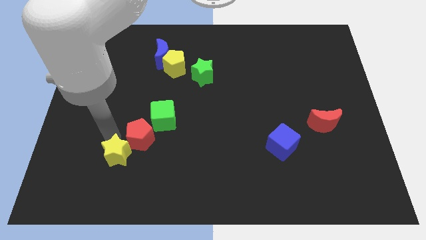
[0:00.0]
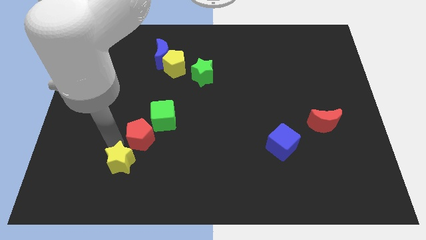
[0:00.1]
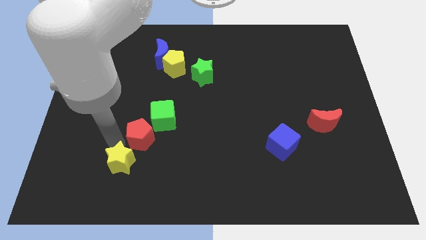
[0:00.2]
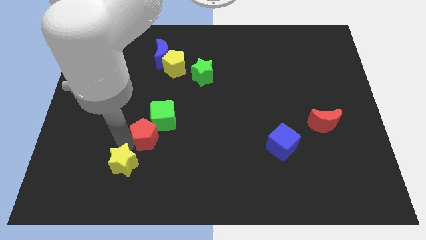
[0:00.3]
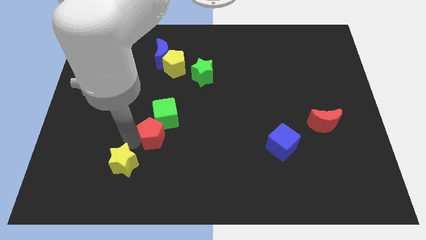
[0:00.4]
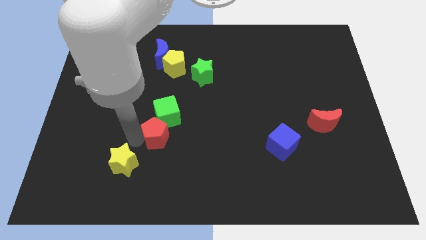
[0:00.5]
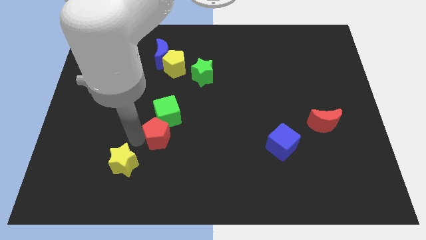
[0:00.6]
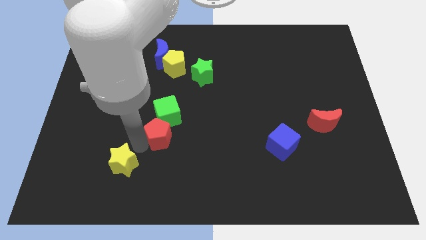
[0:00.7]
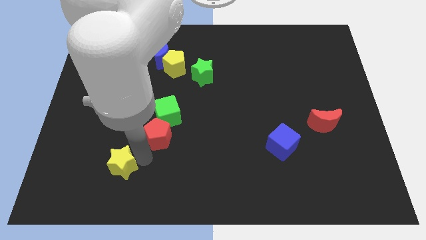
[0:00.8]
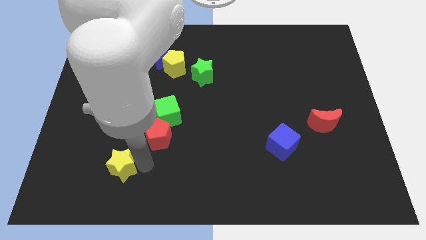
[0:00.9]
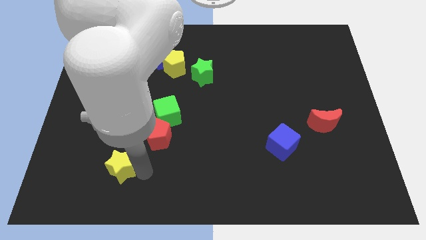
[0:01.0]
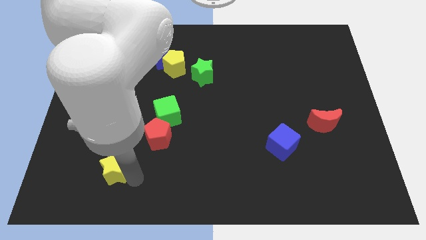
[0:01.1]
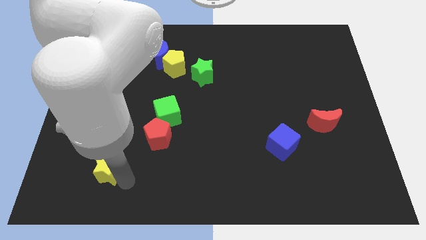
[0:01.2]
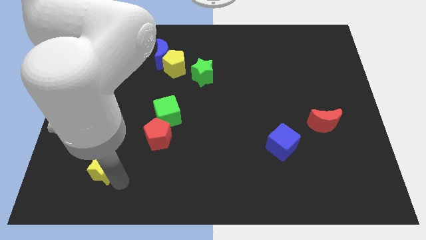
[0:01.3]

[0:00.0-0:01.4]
move the yellow star away from the red pentagon

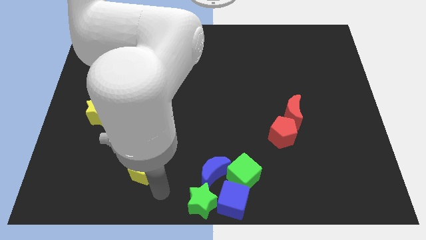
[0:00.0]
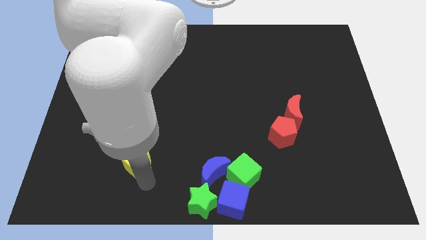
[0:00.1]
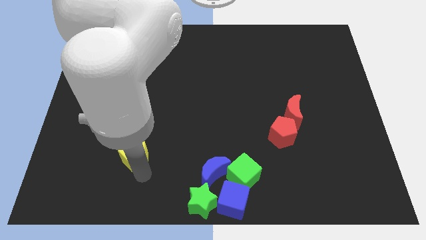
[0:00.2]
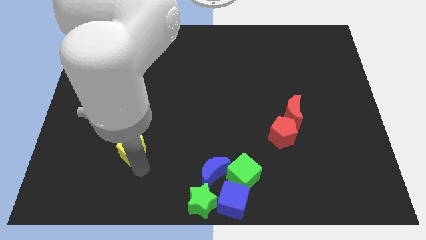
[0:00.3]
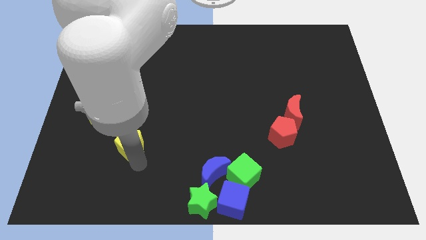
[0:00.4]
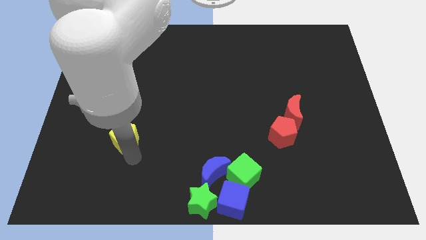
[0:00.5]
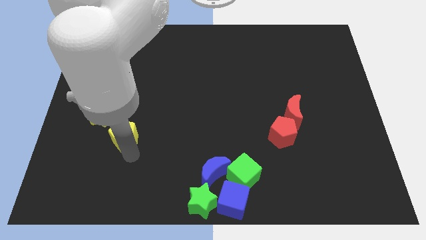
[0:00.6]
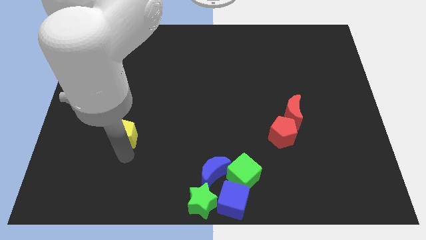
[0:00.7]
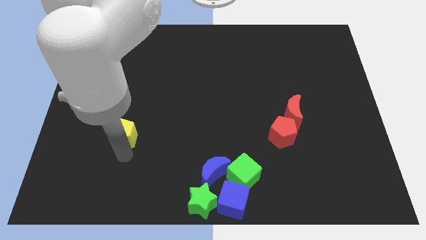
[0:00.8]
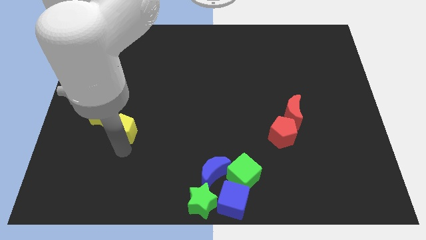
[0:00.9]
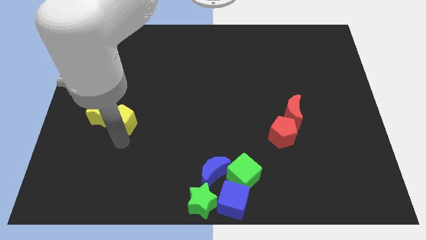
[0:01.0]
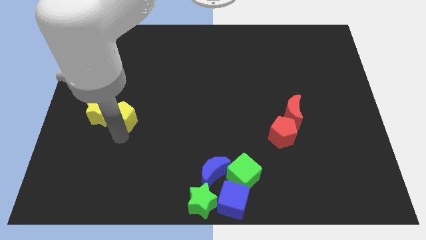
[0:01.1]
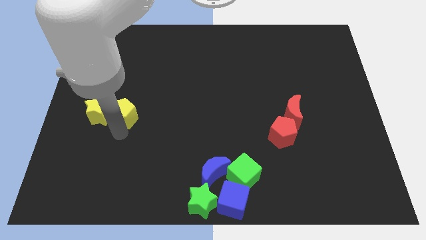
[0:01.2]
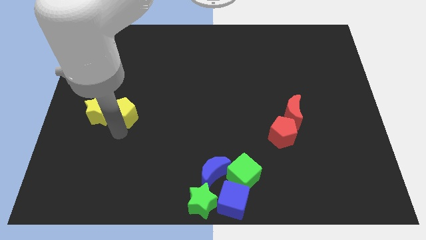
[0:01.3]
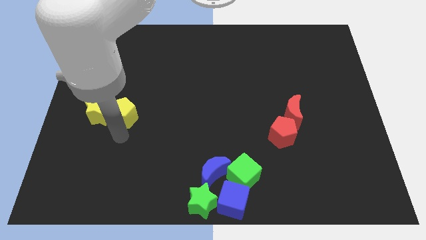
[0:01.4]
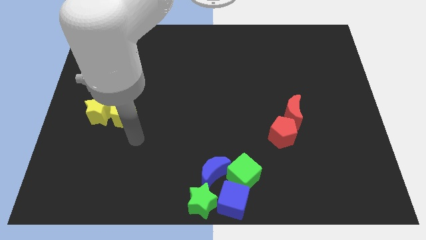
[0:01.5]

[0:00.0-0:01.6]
move the yellow pentagon to the right side of the yellow star

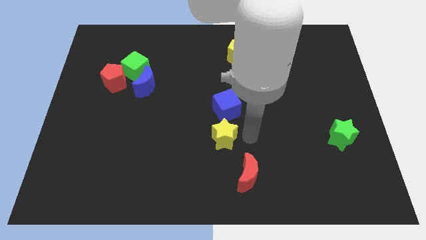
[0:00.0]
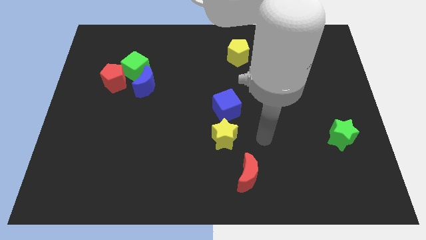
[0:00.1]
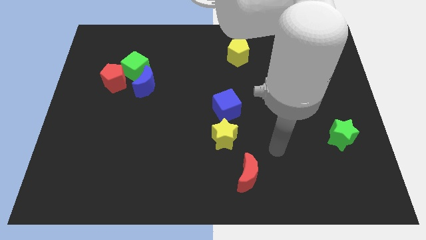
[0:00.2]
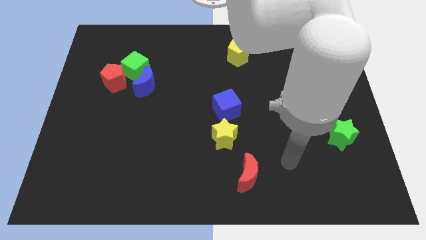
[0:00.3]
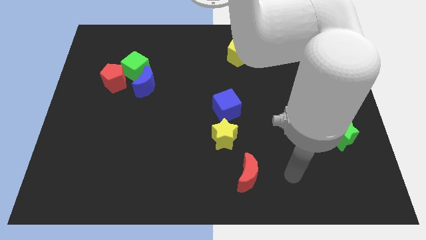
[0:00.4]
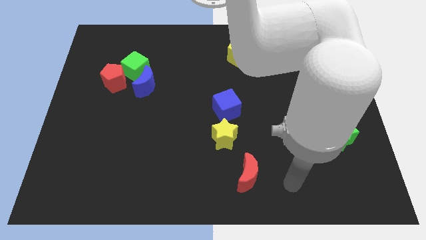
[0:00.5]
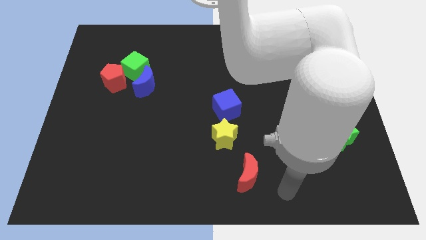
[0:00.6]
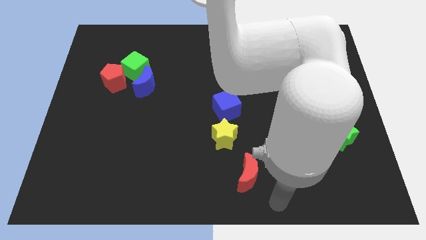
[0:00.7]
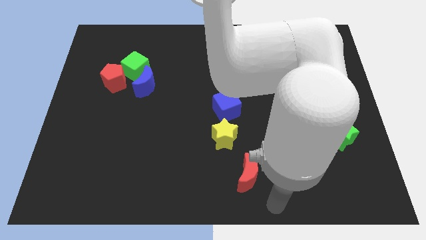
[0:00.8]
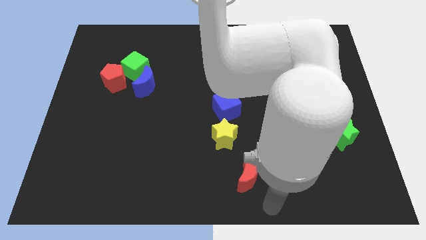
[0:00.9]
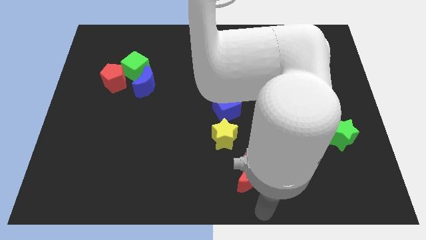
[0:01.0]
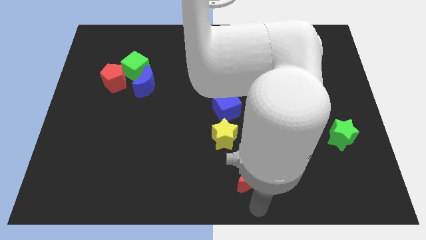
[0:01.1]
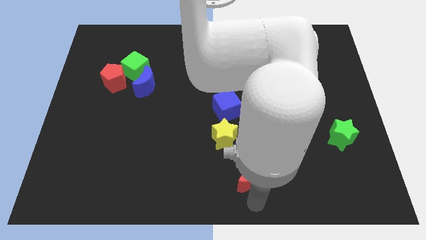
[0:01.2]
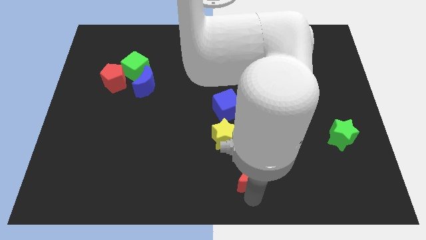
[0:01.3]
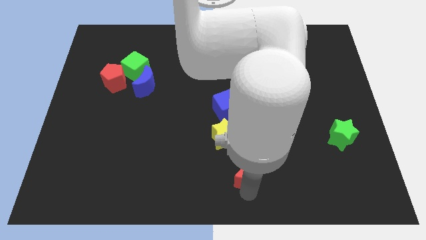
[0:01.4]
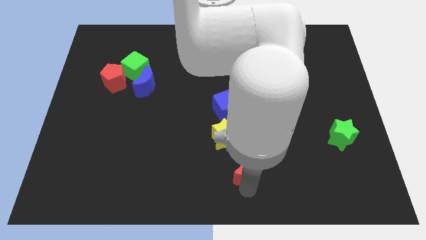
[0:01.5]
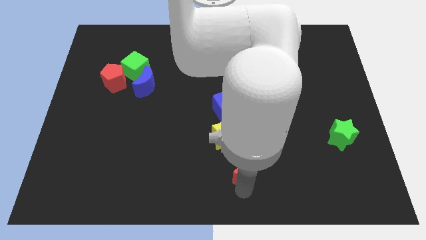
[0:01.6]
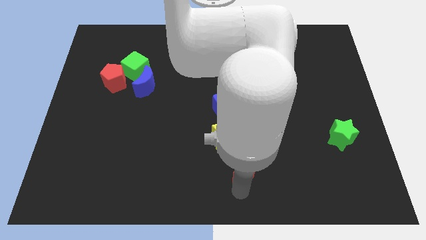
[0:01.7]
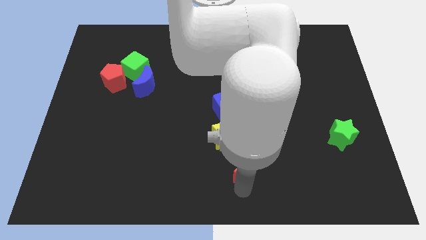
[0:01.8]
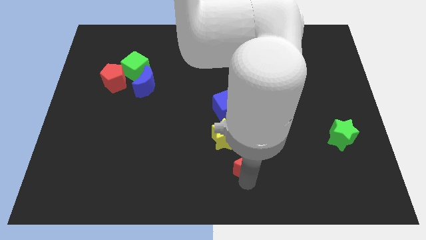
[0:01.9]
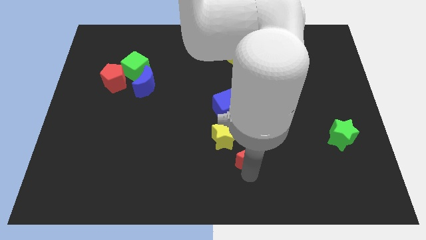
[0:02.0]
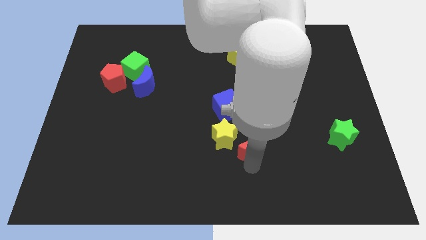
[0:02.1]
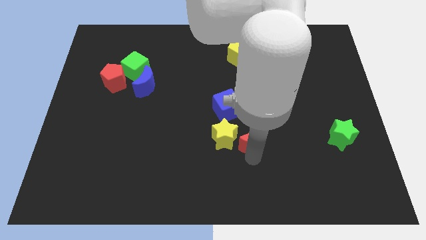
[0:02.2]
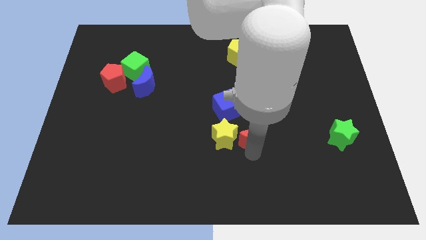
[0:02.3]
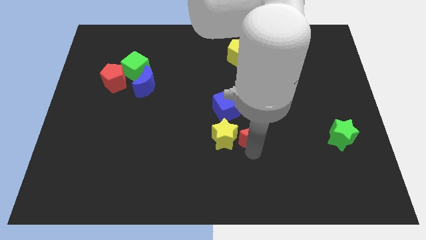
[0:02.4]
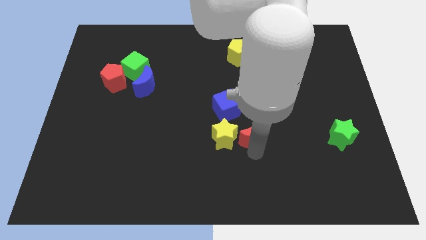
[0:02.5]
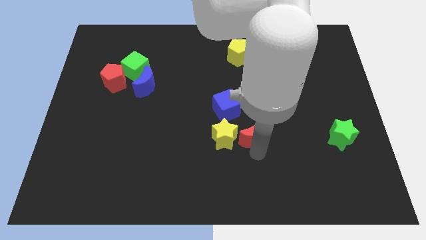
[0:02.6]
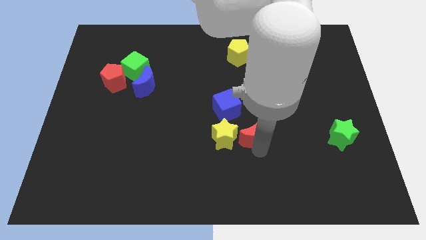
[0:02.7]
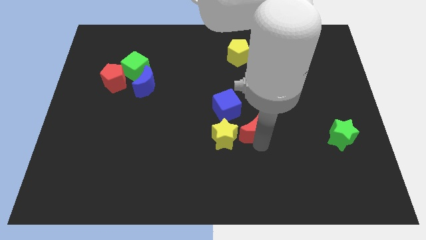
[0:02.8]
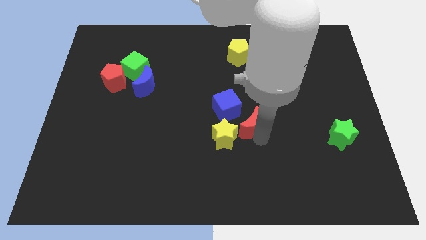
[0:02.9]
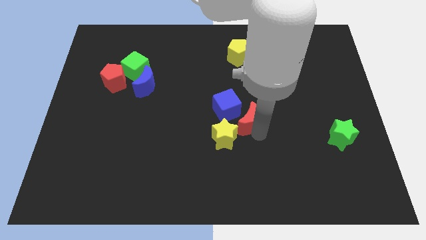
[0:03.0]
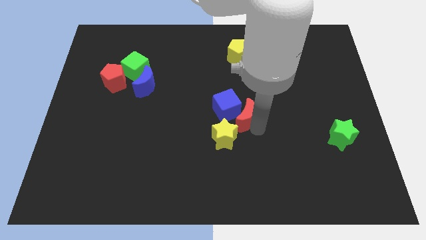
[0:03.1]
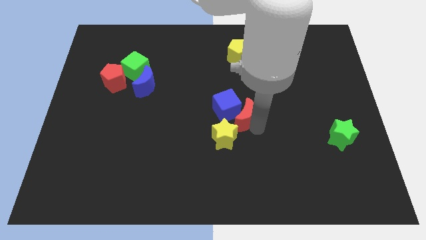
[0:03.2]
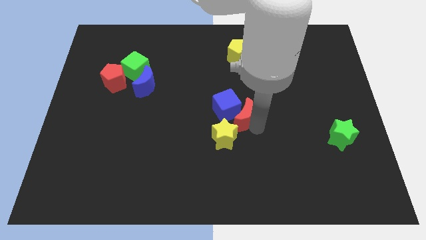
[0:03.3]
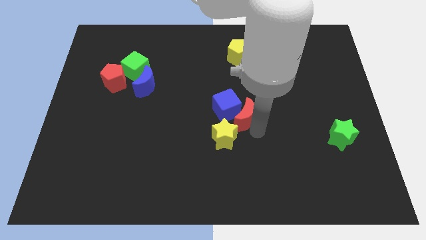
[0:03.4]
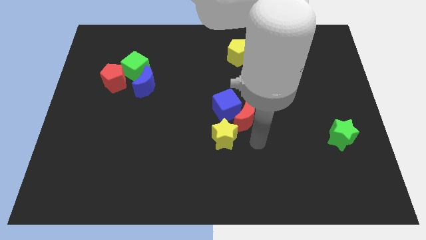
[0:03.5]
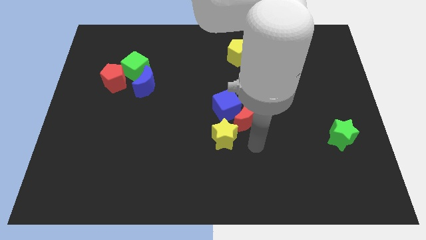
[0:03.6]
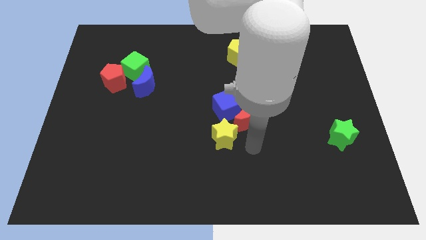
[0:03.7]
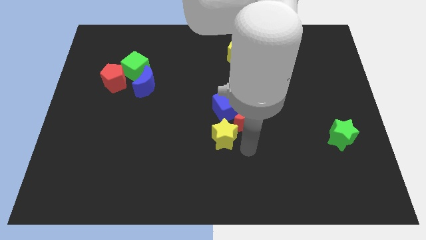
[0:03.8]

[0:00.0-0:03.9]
move red moon into the blue cube

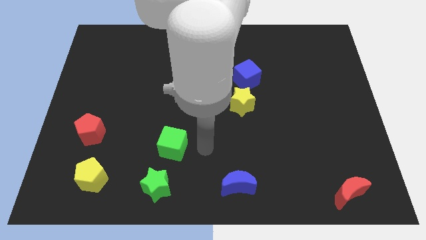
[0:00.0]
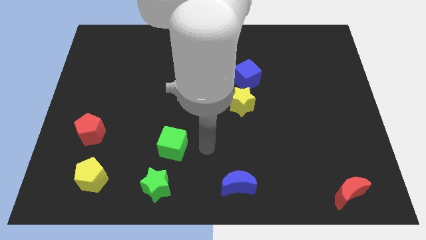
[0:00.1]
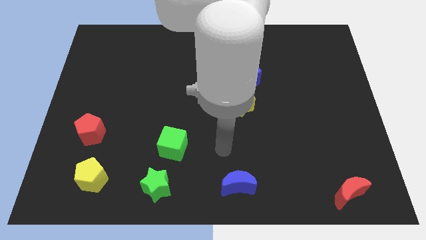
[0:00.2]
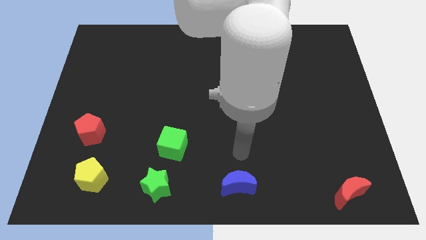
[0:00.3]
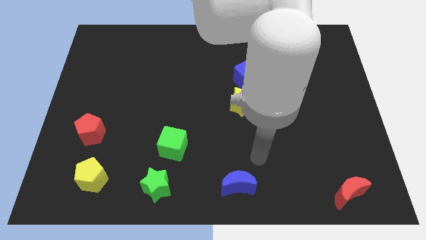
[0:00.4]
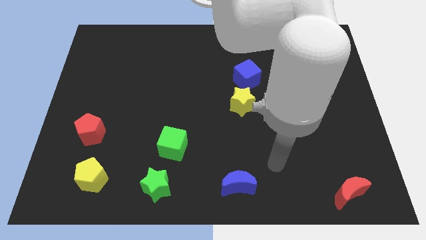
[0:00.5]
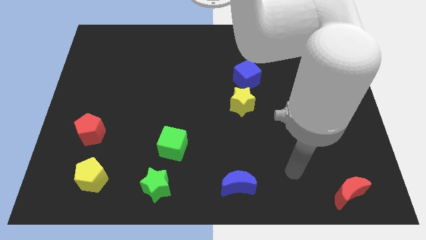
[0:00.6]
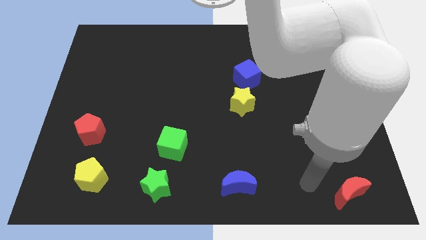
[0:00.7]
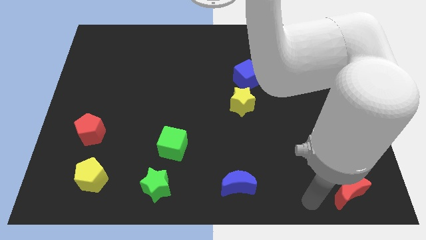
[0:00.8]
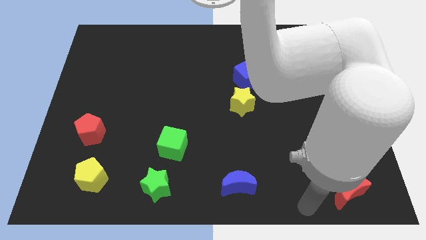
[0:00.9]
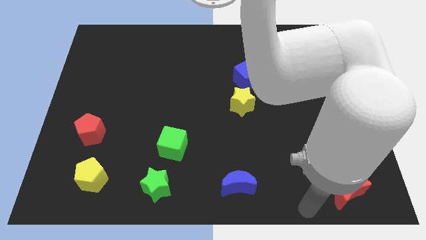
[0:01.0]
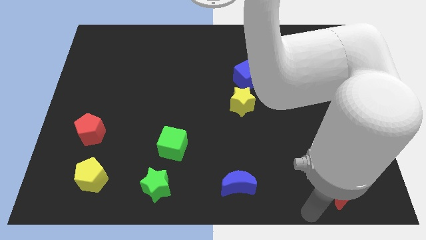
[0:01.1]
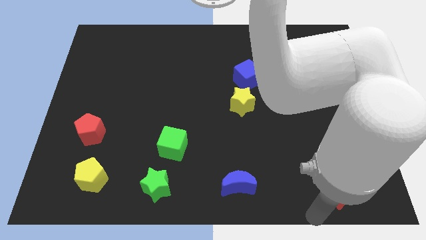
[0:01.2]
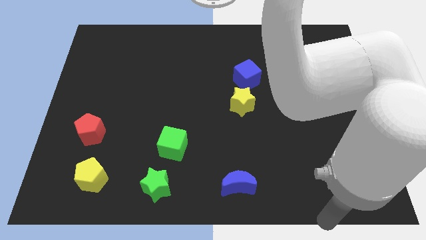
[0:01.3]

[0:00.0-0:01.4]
move the arm towards the red moon

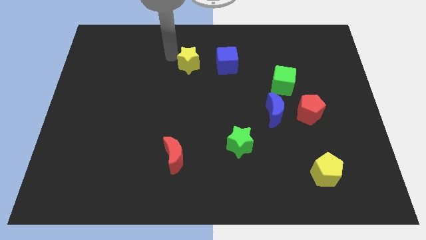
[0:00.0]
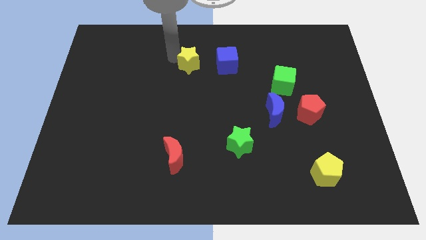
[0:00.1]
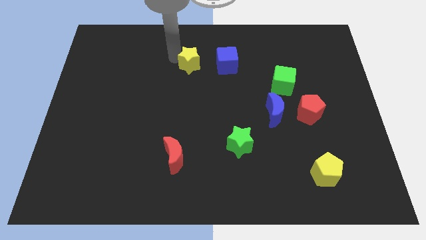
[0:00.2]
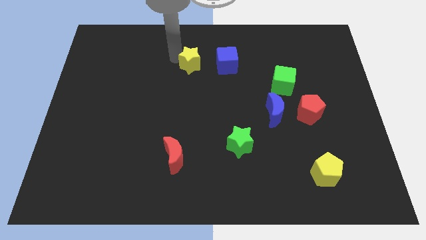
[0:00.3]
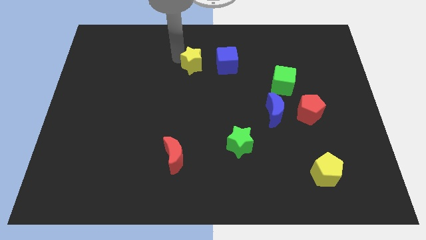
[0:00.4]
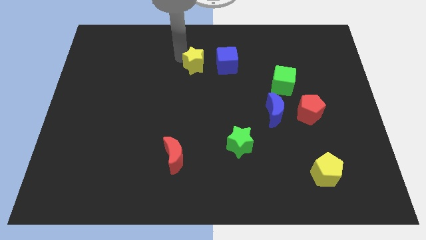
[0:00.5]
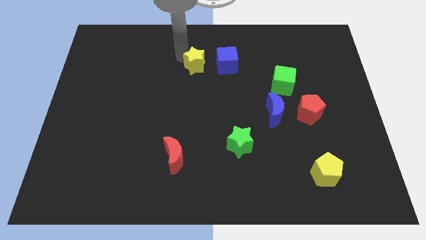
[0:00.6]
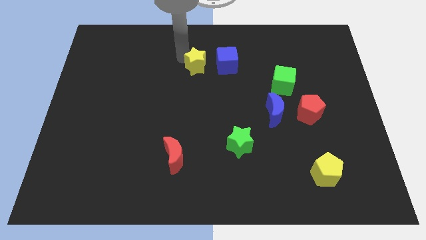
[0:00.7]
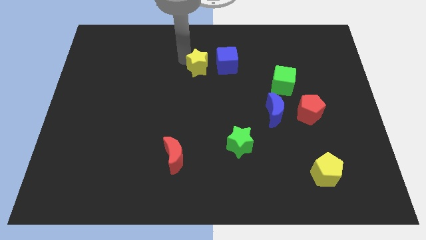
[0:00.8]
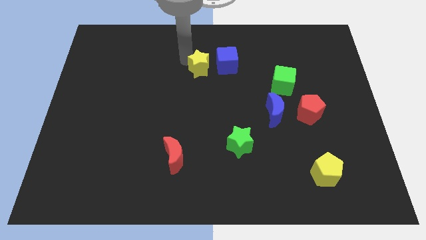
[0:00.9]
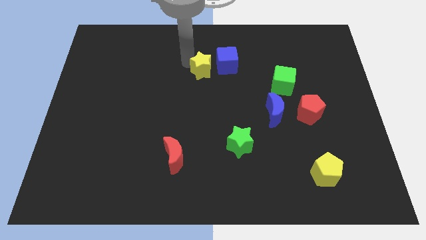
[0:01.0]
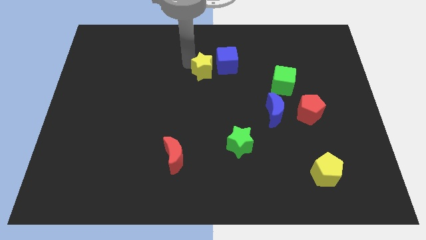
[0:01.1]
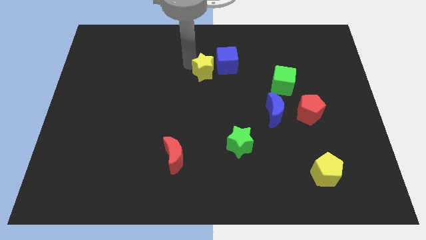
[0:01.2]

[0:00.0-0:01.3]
push the yellow star towards blue cube
